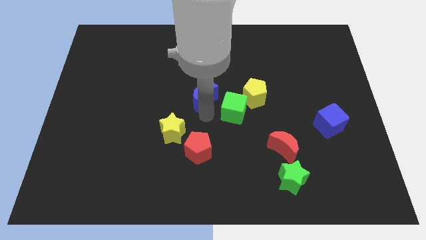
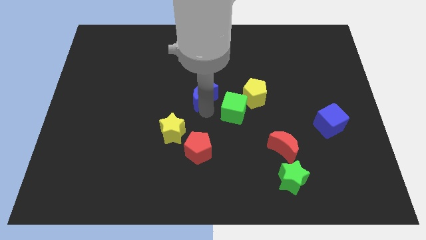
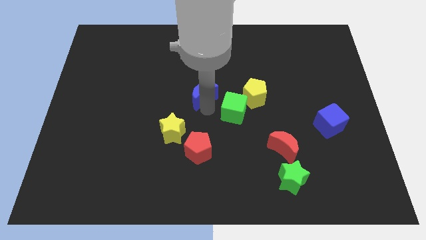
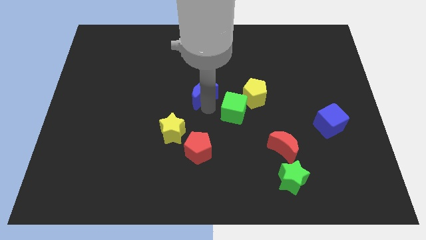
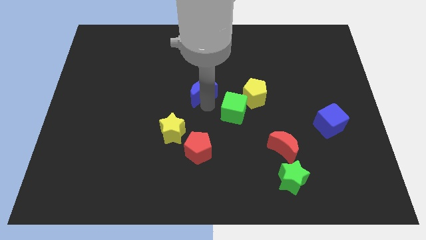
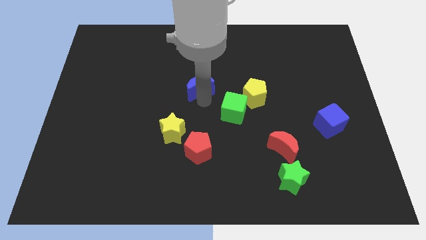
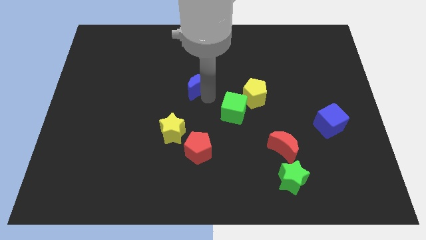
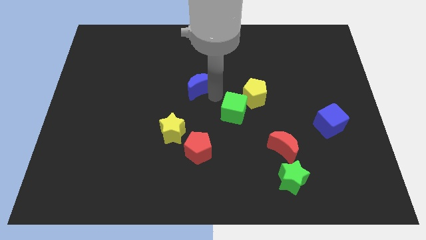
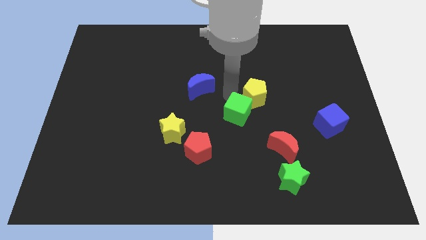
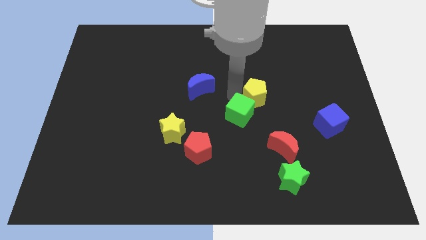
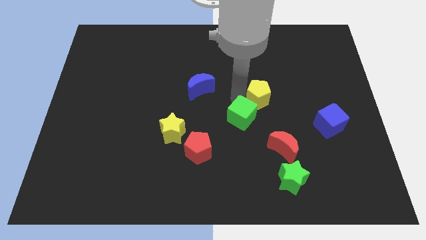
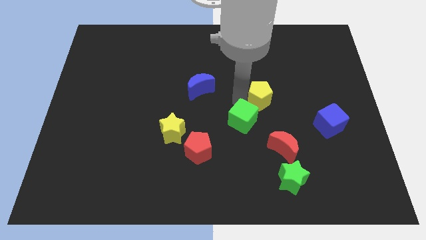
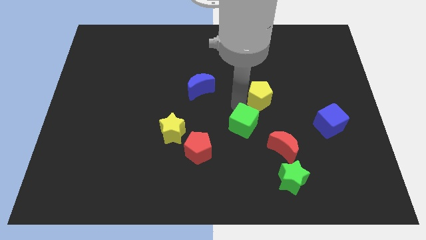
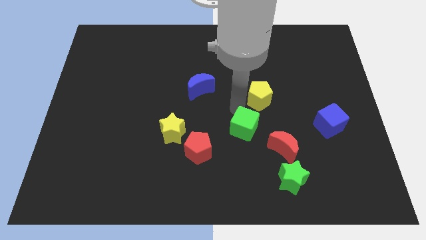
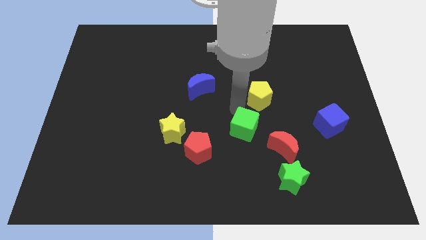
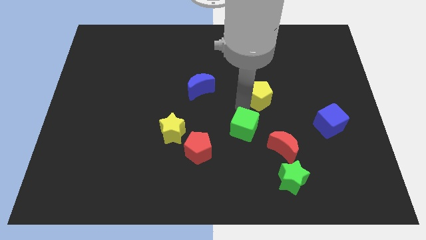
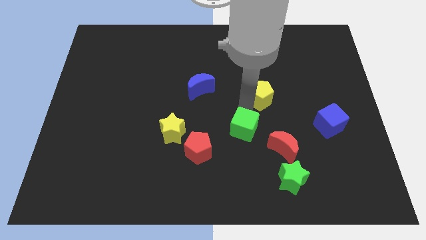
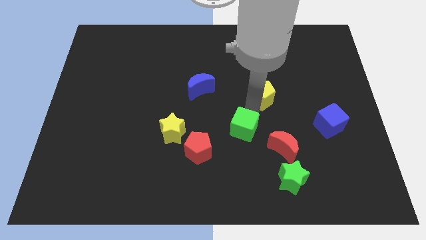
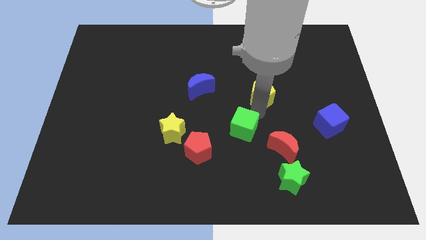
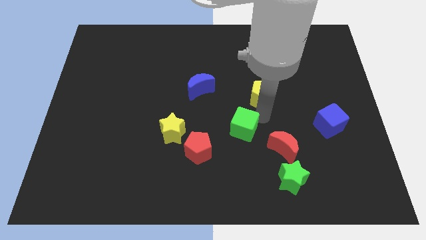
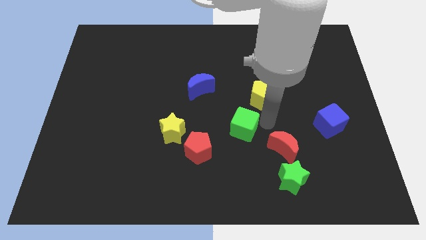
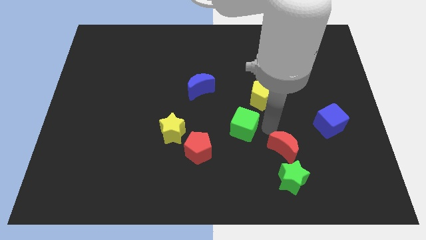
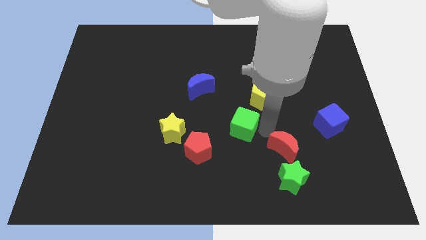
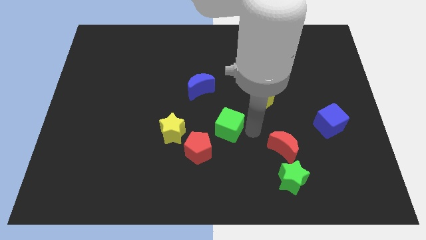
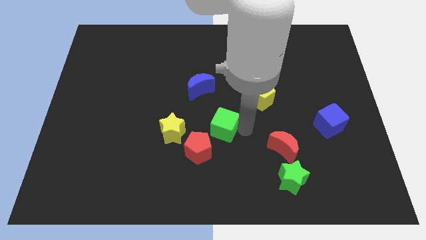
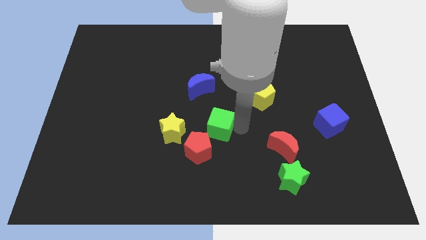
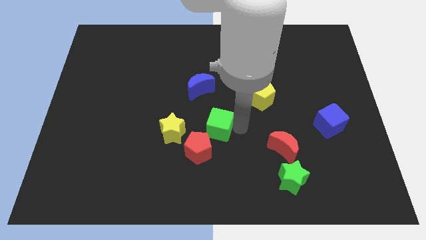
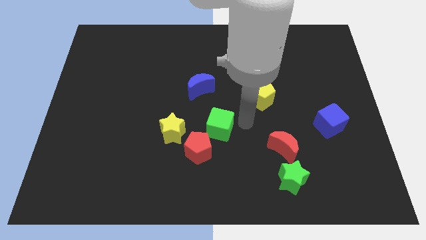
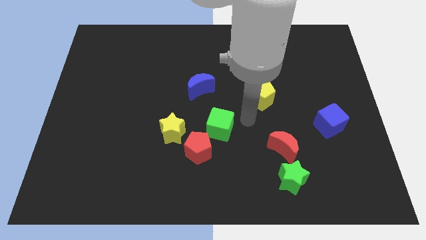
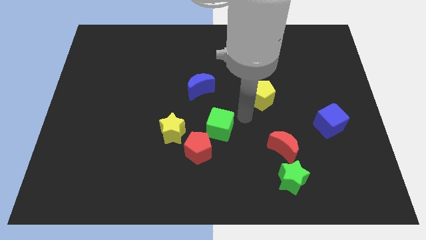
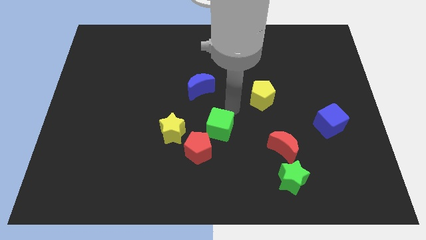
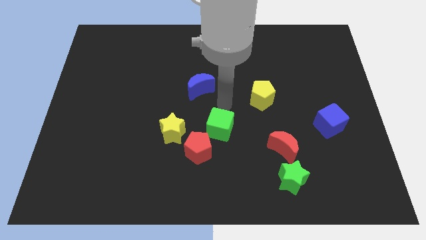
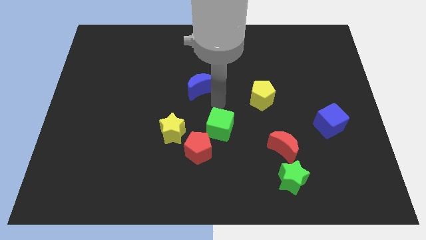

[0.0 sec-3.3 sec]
move the group of objects to the center of the board

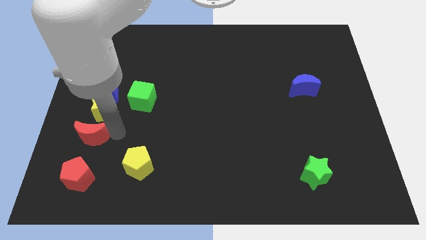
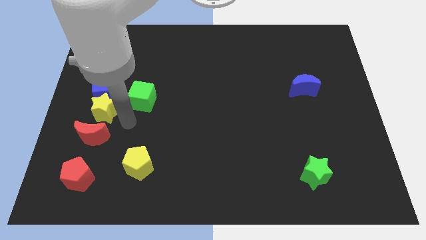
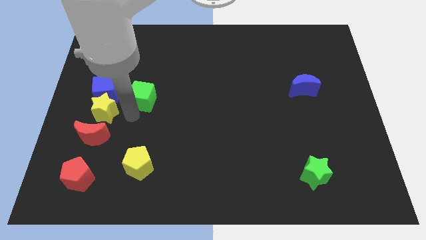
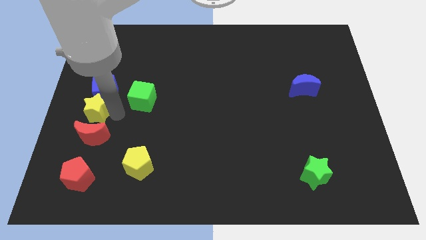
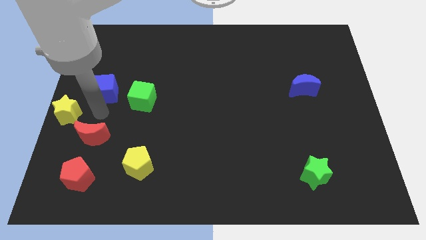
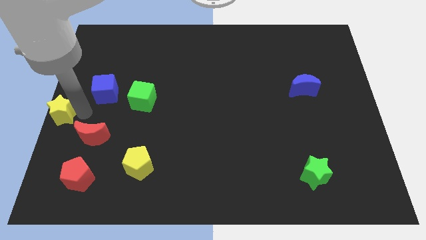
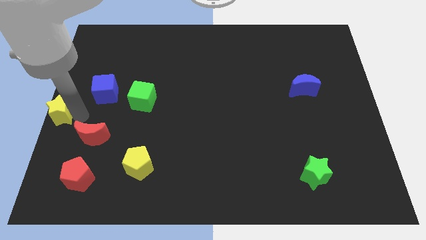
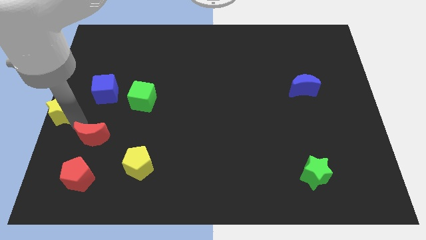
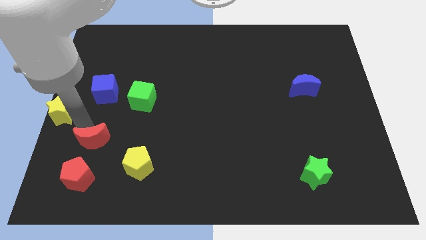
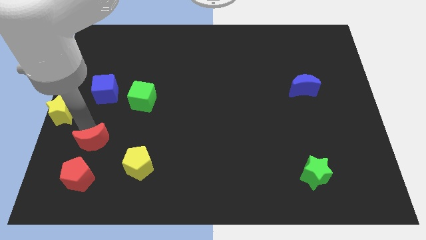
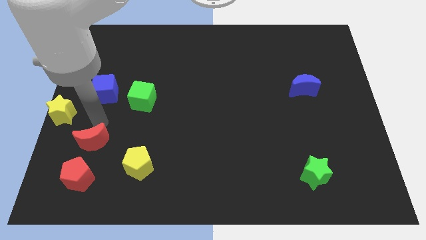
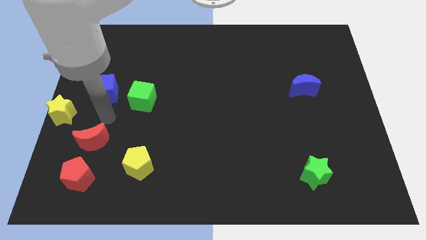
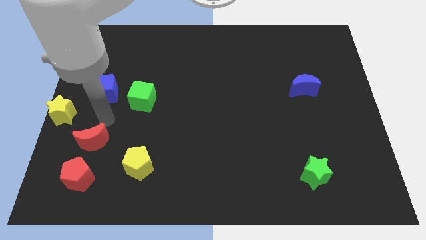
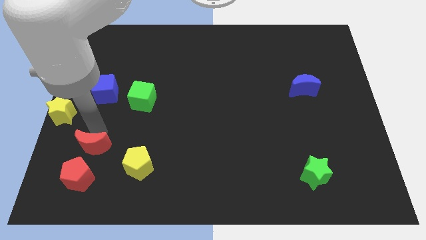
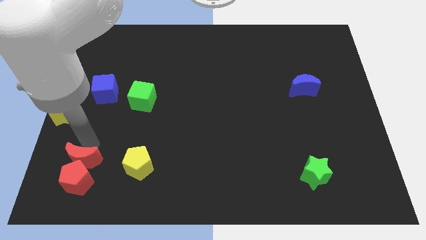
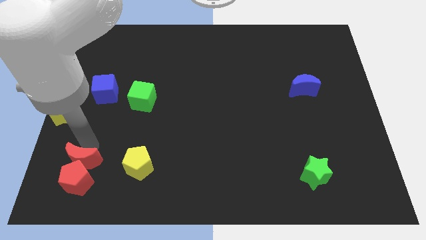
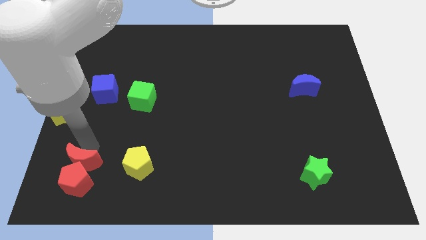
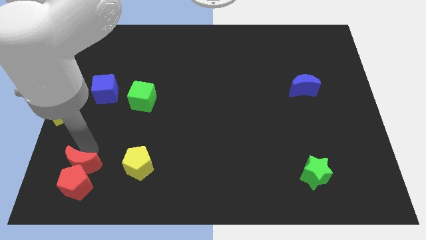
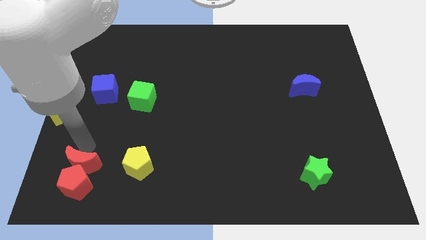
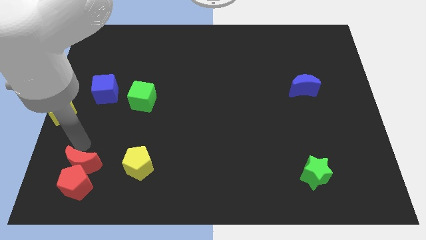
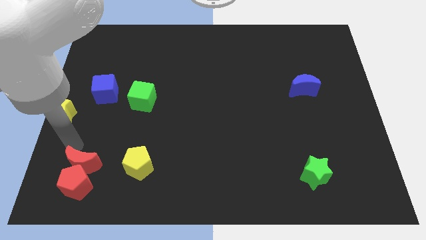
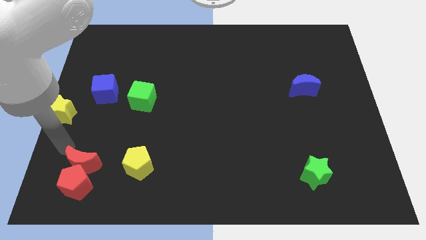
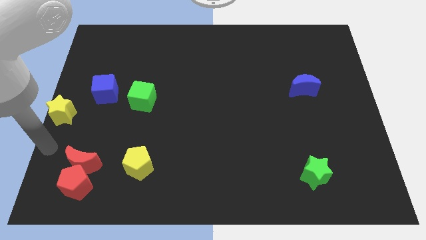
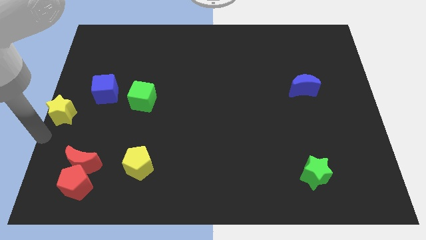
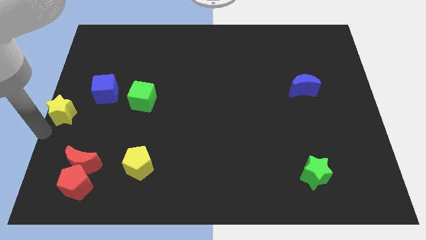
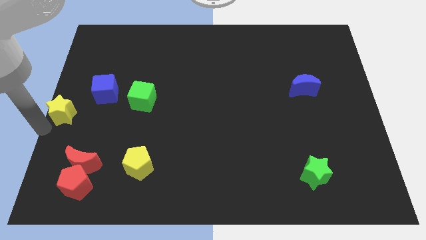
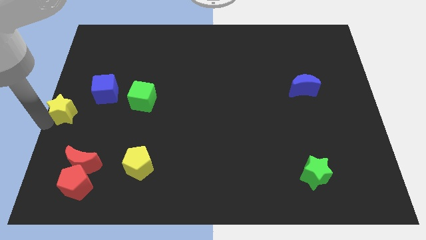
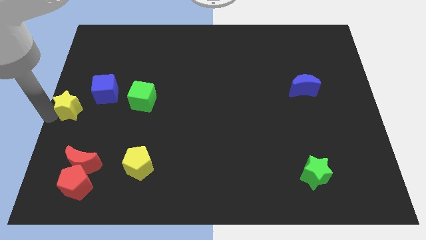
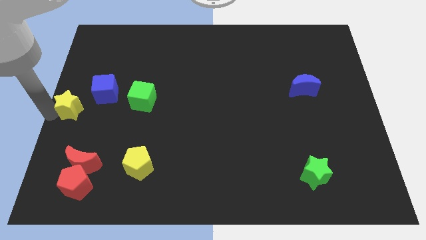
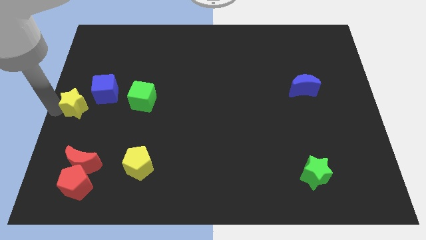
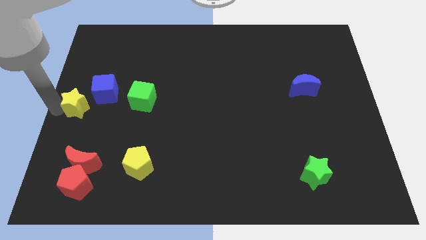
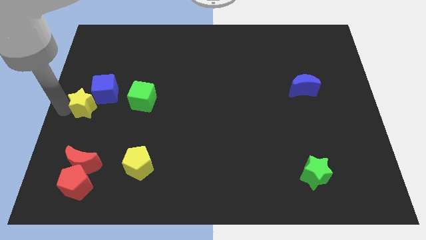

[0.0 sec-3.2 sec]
separate the yellow star and red crescent from the line

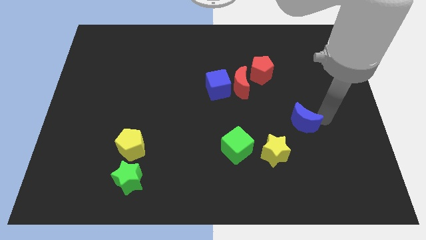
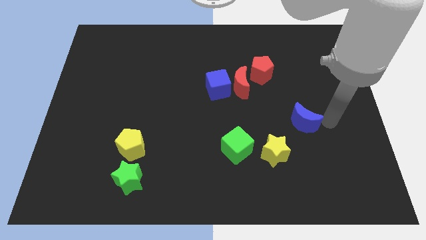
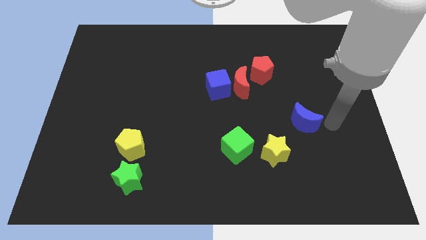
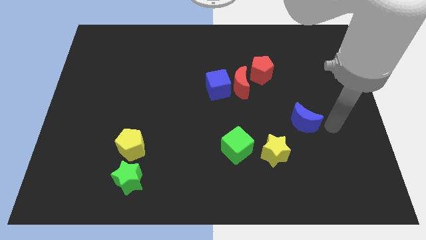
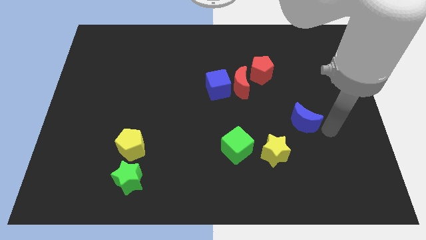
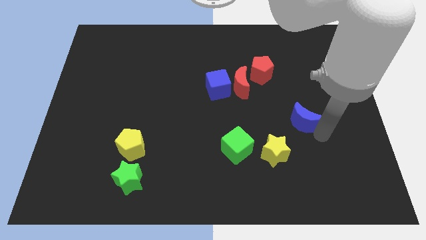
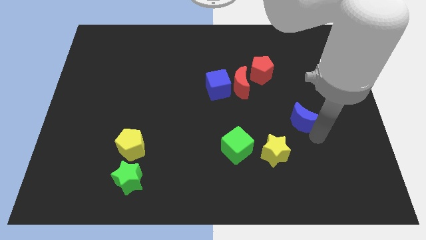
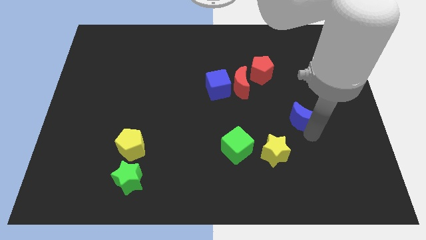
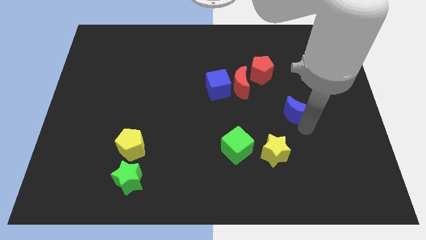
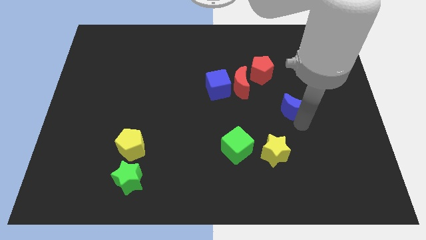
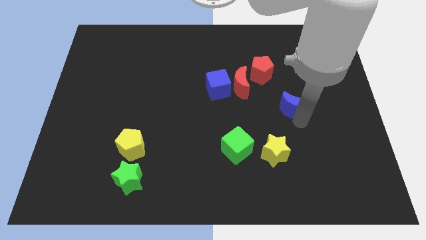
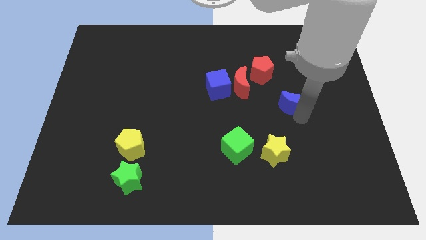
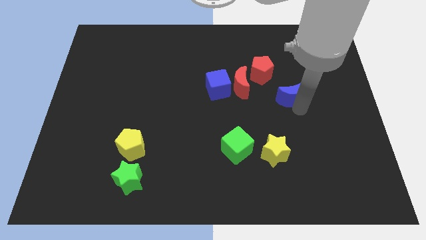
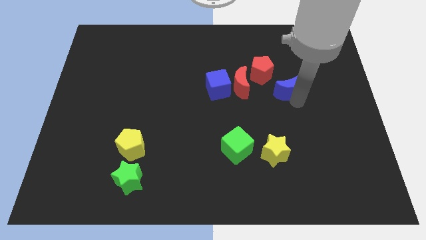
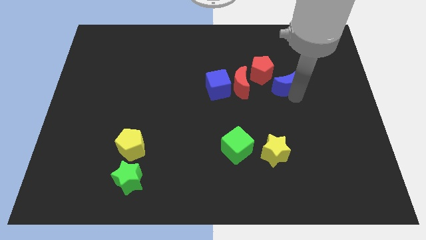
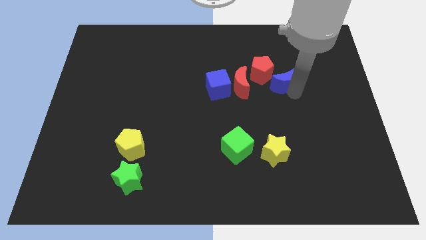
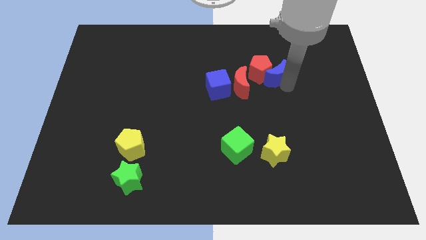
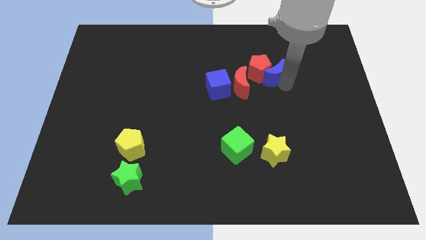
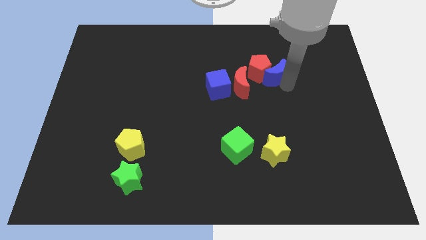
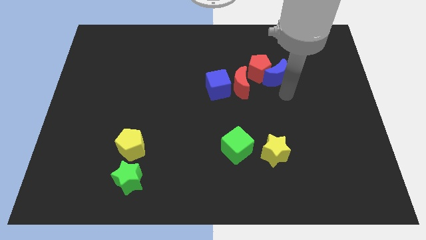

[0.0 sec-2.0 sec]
push the blue moon into the red pentagon

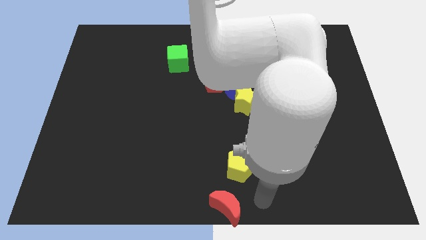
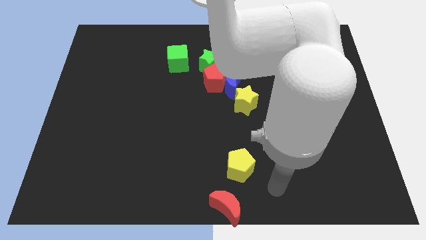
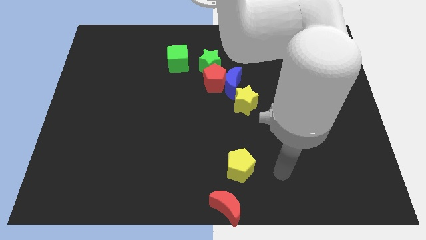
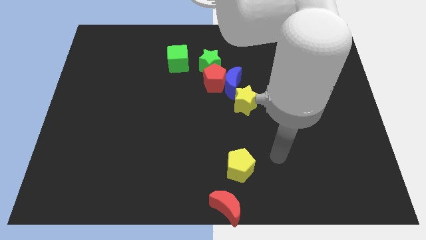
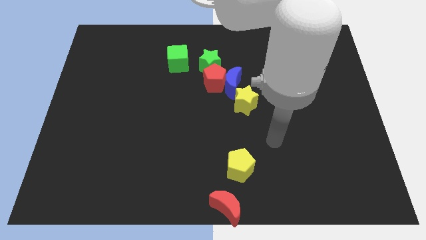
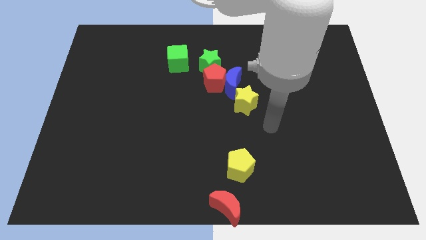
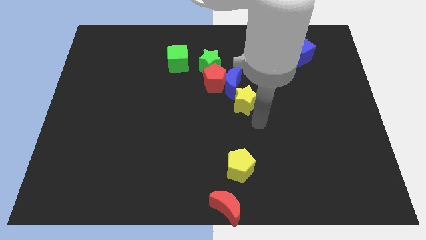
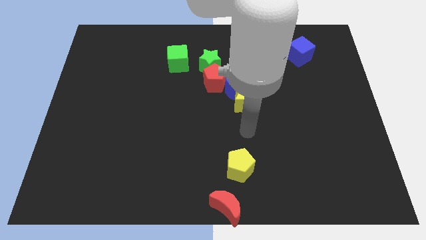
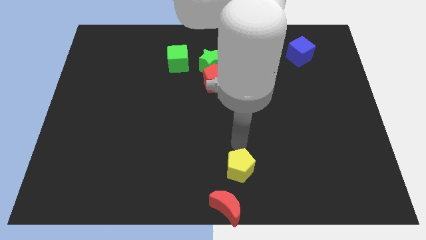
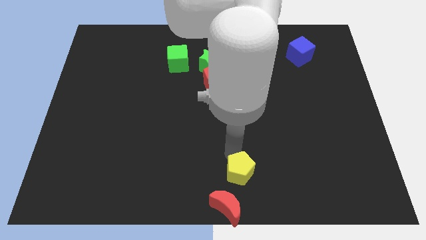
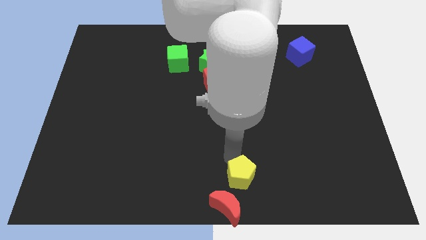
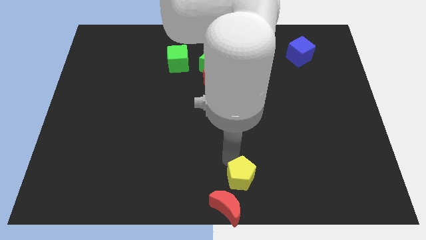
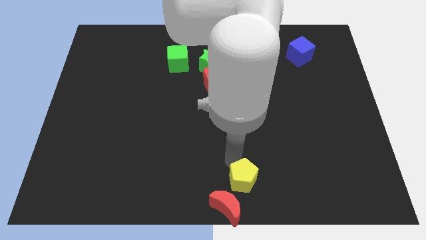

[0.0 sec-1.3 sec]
place the yellow pentagon at the top of red moon
